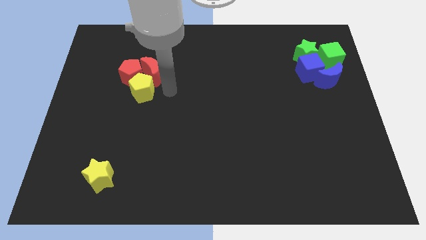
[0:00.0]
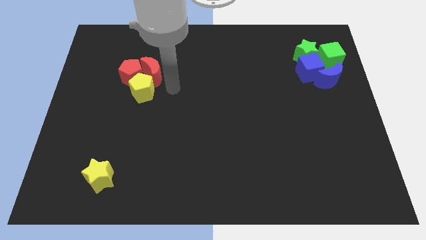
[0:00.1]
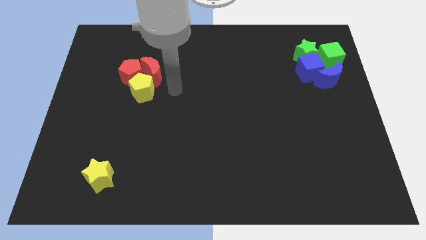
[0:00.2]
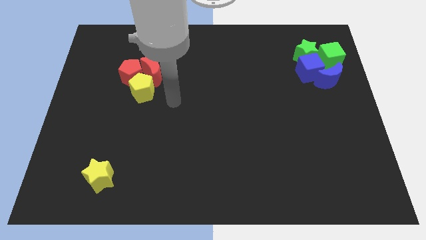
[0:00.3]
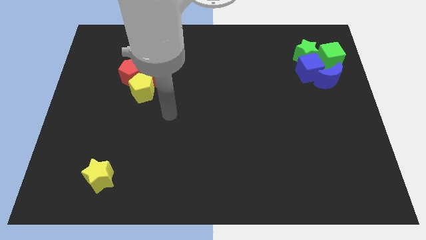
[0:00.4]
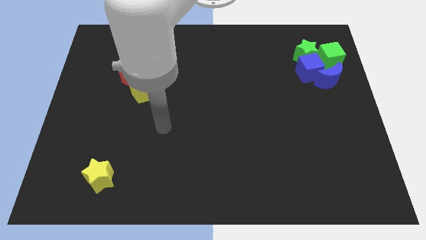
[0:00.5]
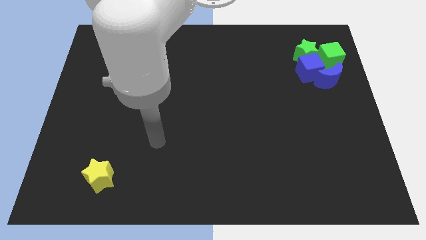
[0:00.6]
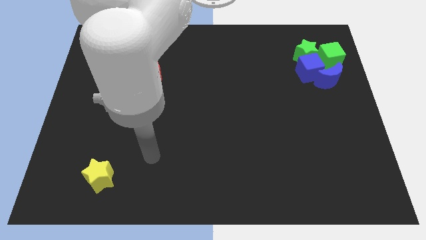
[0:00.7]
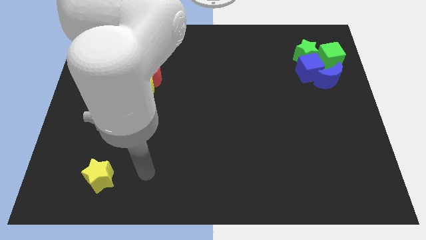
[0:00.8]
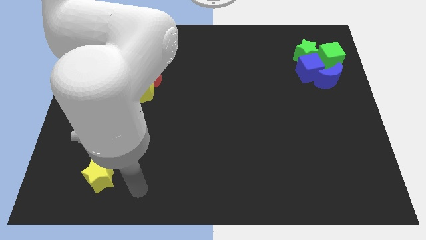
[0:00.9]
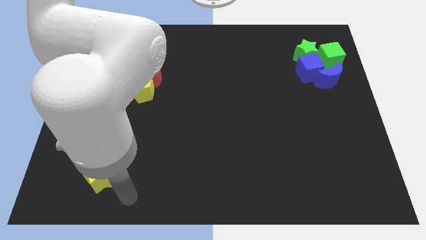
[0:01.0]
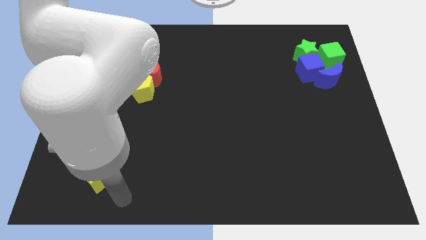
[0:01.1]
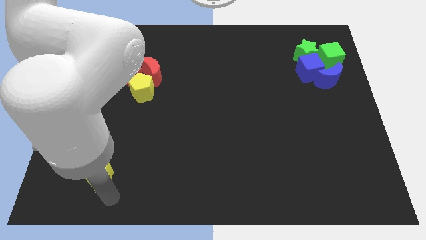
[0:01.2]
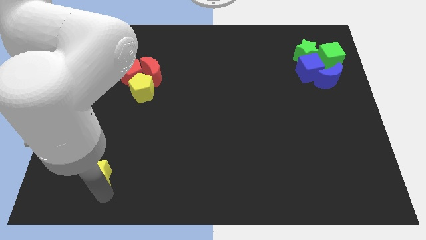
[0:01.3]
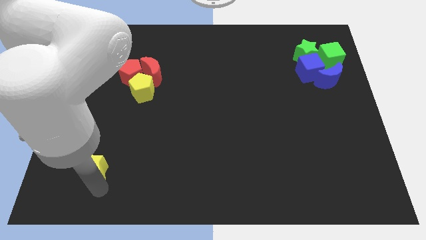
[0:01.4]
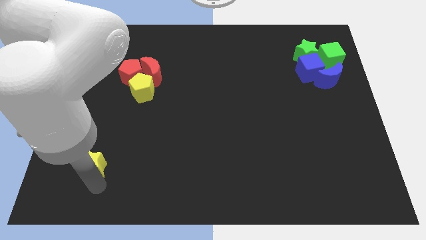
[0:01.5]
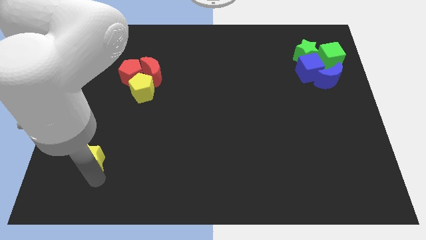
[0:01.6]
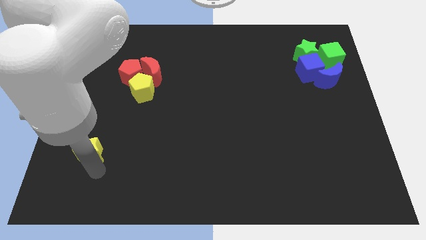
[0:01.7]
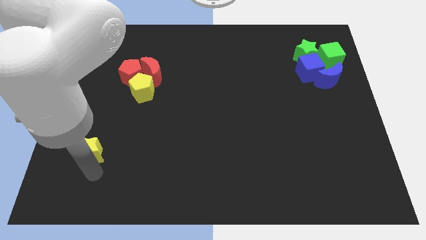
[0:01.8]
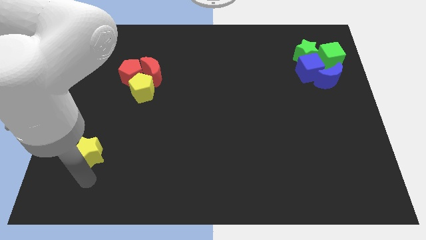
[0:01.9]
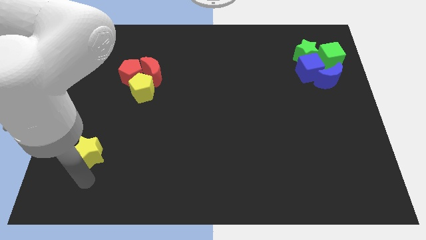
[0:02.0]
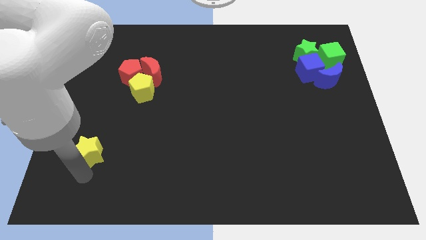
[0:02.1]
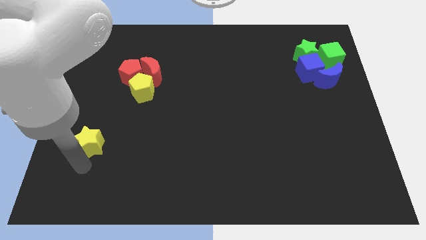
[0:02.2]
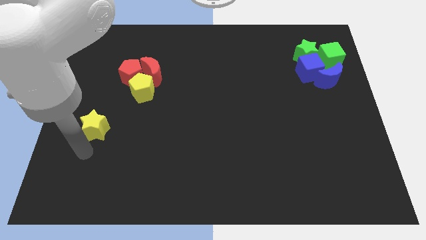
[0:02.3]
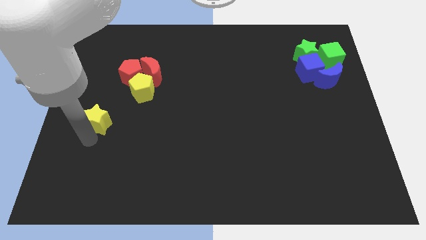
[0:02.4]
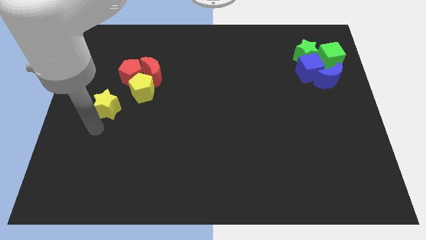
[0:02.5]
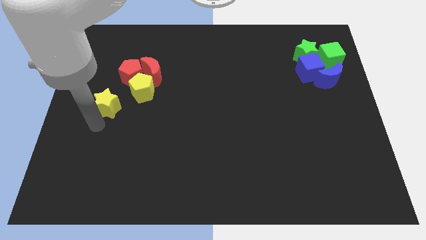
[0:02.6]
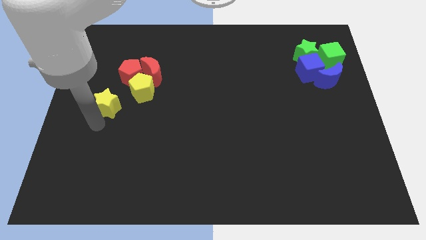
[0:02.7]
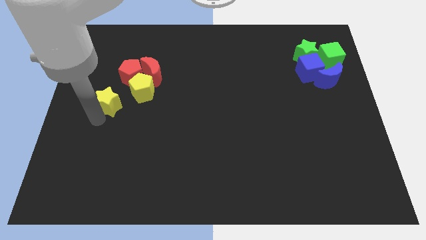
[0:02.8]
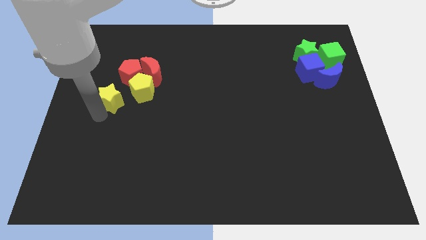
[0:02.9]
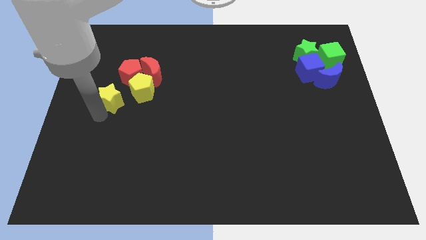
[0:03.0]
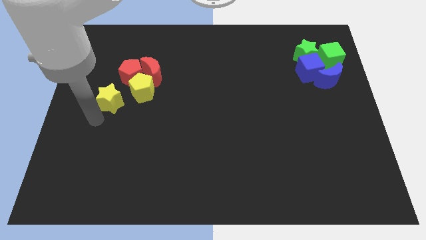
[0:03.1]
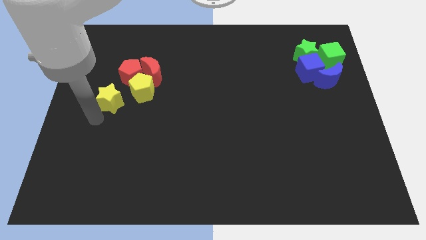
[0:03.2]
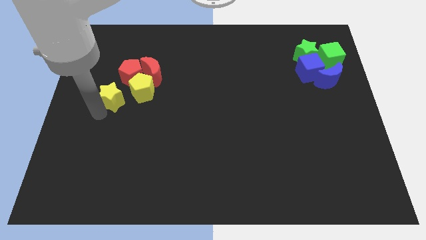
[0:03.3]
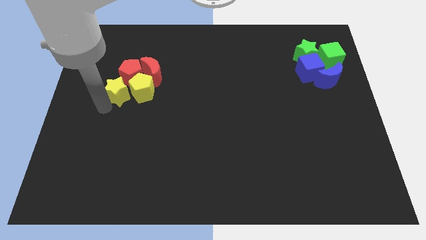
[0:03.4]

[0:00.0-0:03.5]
put the yellow star to the left side of yellow pentagon

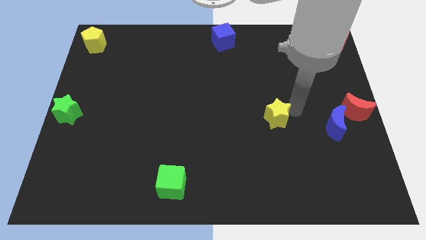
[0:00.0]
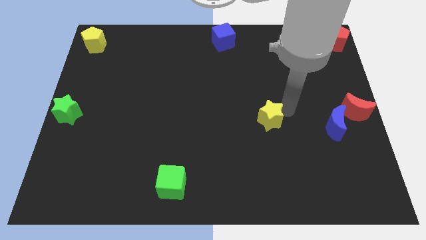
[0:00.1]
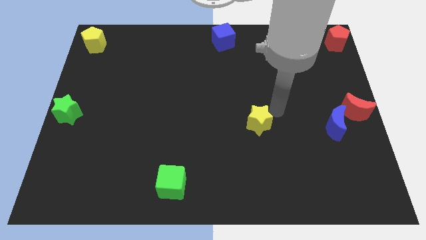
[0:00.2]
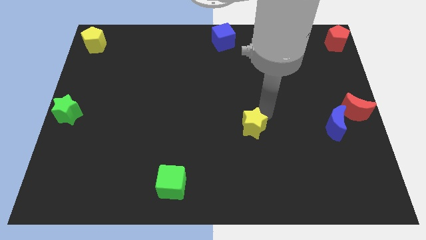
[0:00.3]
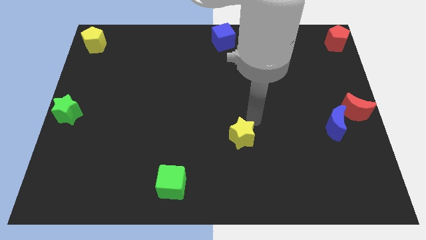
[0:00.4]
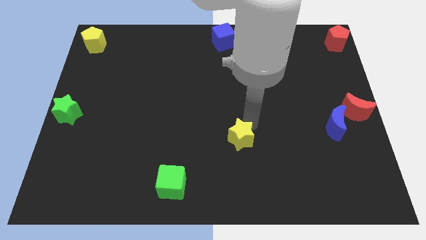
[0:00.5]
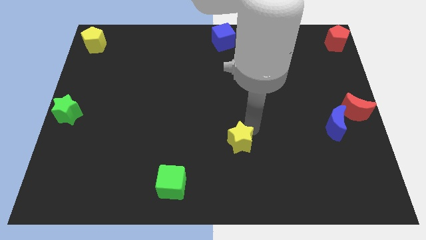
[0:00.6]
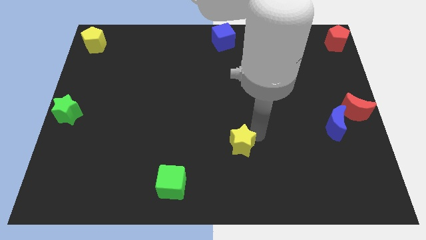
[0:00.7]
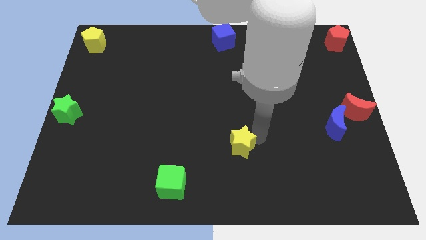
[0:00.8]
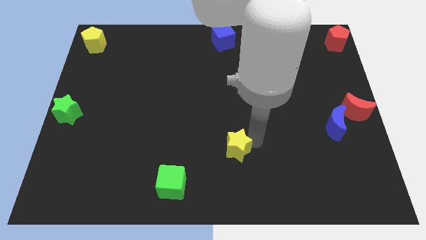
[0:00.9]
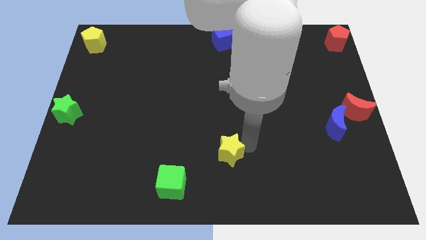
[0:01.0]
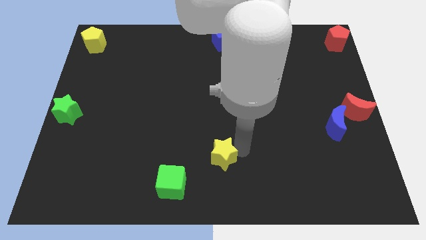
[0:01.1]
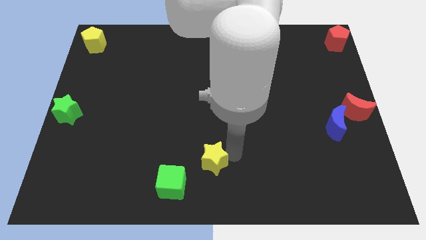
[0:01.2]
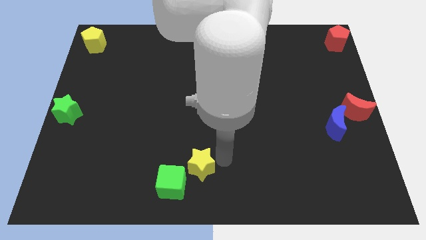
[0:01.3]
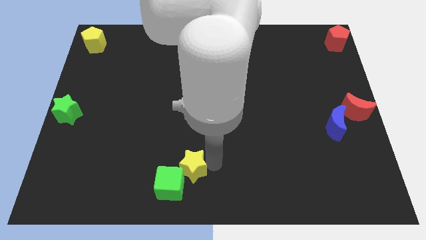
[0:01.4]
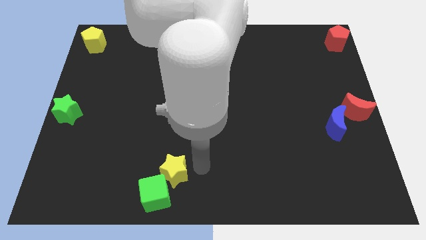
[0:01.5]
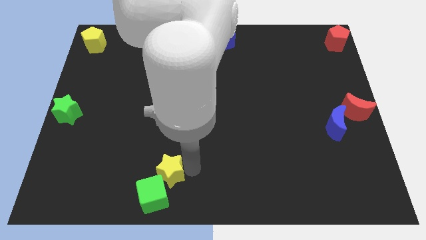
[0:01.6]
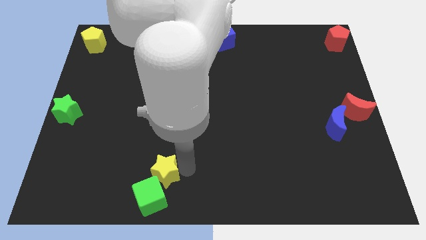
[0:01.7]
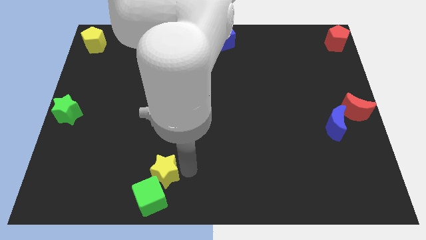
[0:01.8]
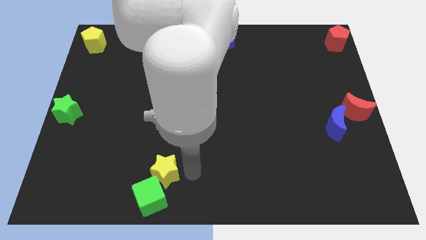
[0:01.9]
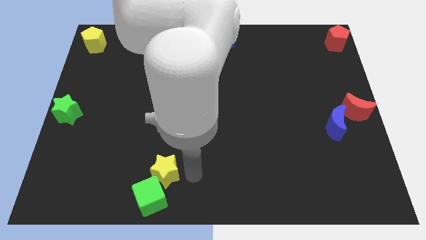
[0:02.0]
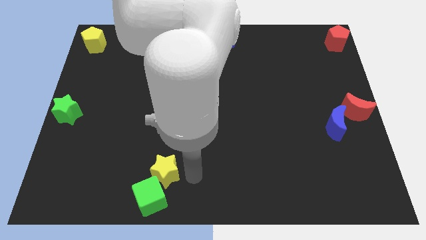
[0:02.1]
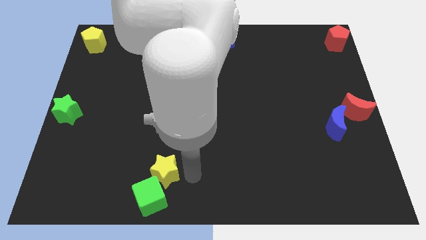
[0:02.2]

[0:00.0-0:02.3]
move the yellow star into the green cube

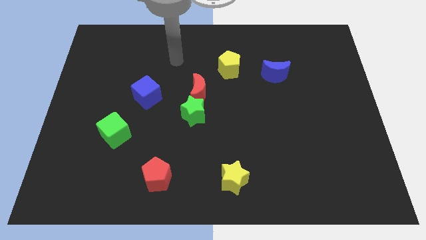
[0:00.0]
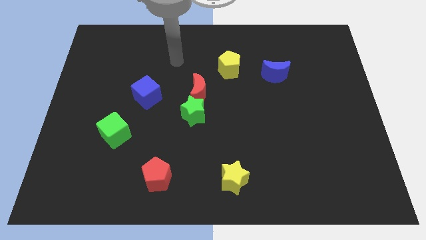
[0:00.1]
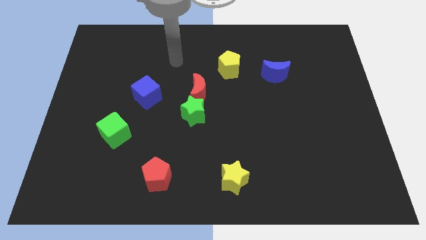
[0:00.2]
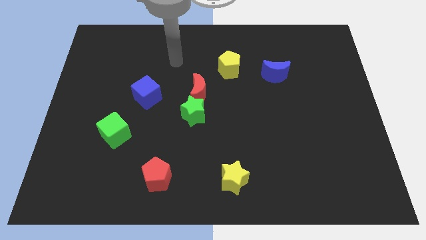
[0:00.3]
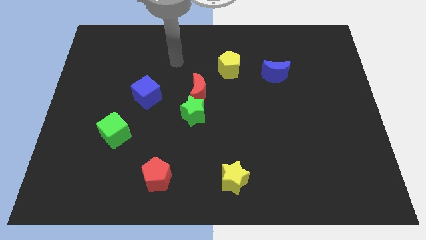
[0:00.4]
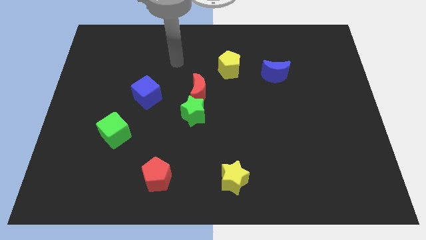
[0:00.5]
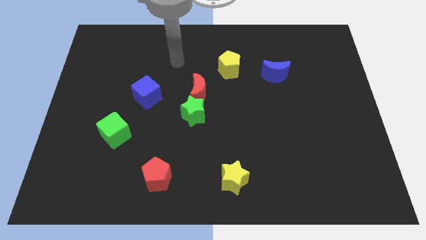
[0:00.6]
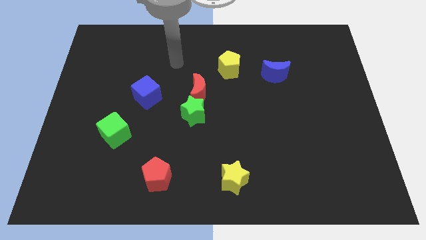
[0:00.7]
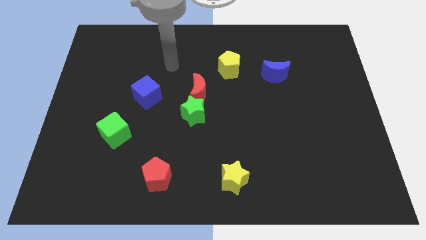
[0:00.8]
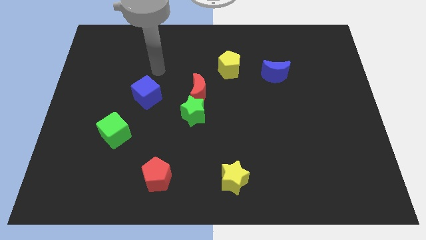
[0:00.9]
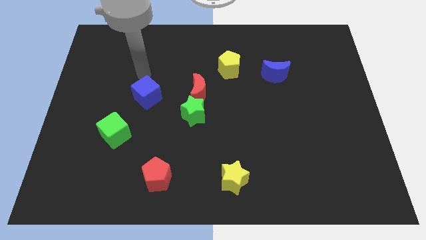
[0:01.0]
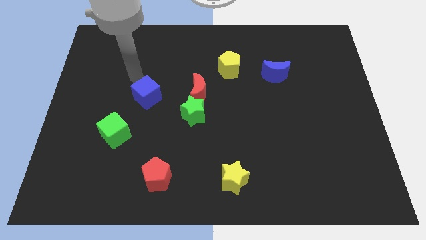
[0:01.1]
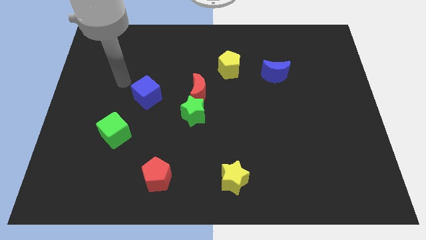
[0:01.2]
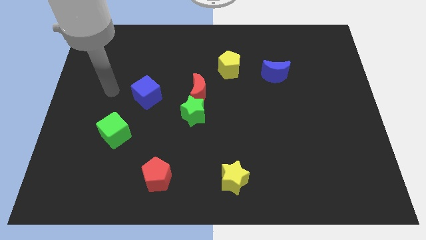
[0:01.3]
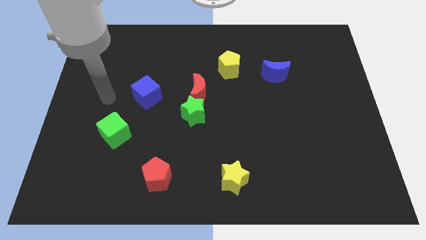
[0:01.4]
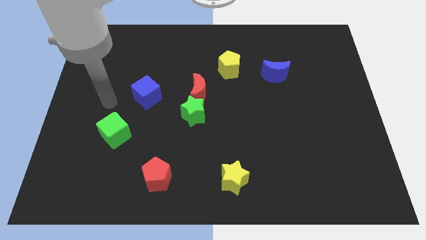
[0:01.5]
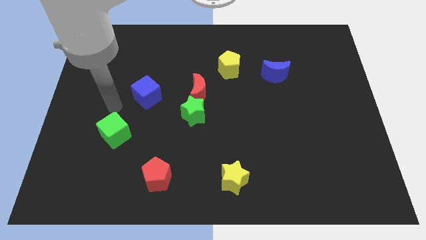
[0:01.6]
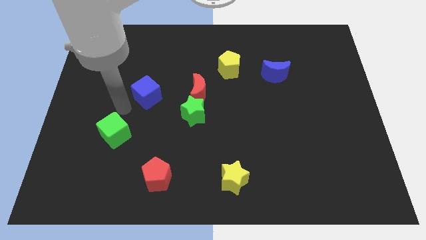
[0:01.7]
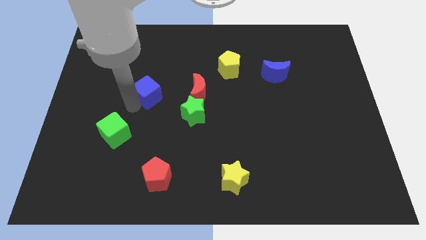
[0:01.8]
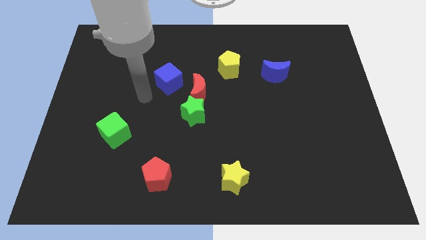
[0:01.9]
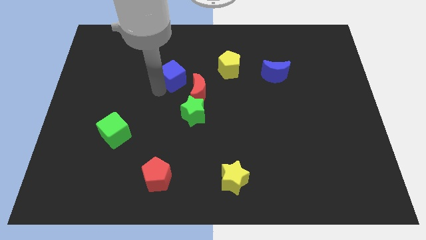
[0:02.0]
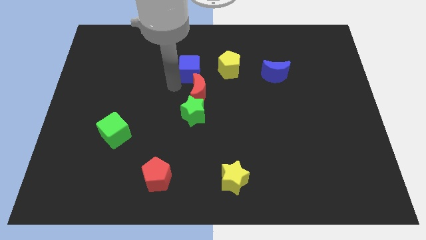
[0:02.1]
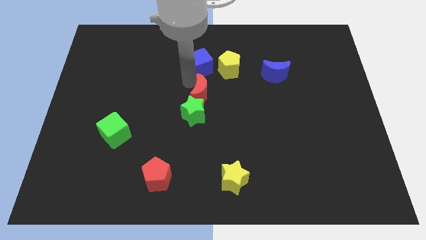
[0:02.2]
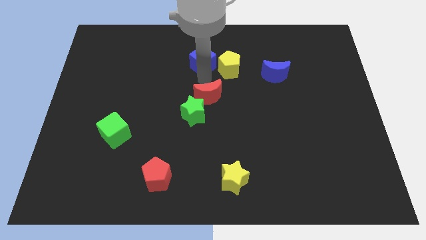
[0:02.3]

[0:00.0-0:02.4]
put the blue cube above the red moon

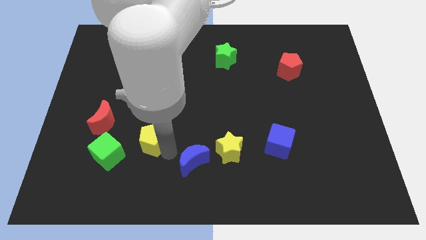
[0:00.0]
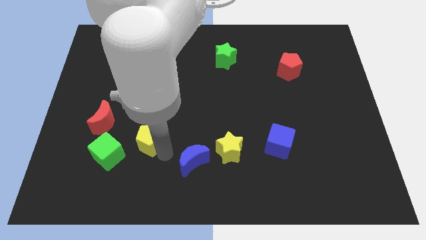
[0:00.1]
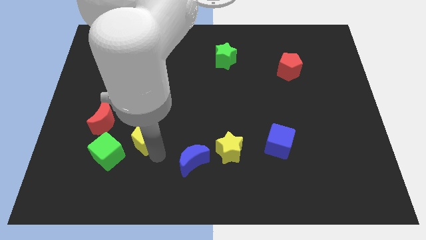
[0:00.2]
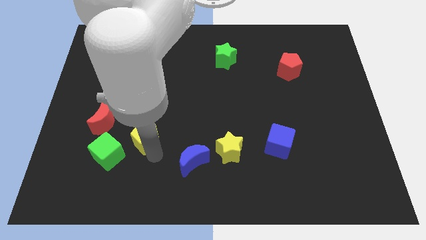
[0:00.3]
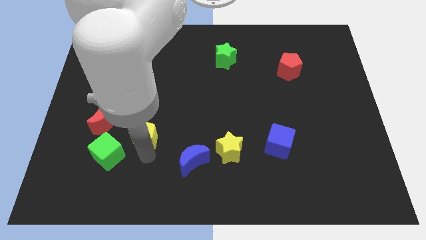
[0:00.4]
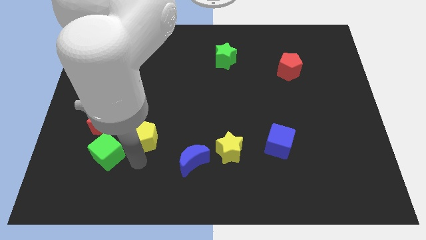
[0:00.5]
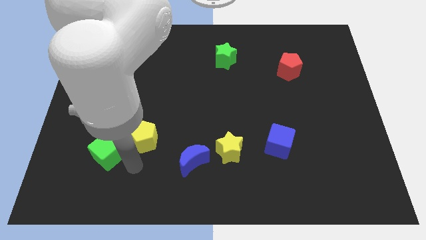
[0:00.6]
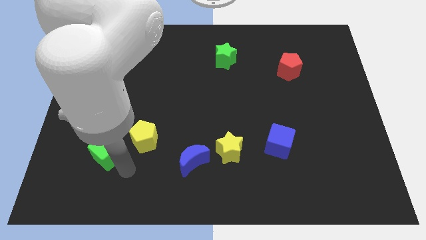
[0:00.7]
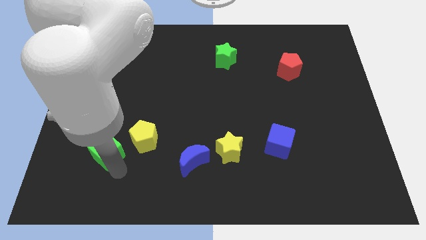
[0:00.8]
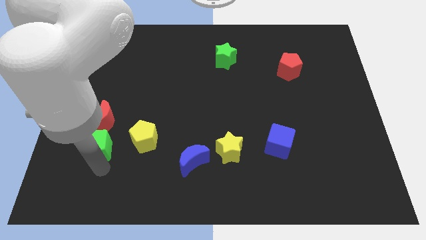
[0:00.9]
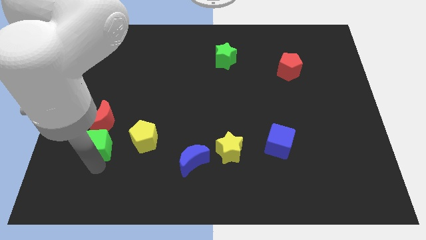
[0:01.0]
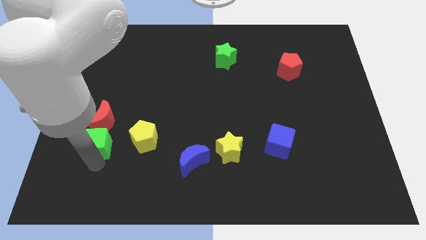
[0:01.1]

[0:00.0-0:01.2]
move the green cube to the bottom of the red crescent
